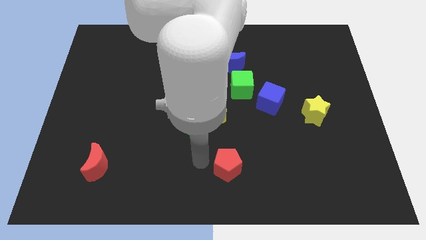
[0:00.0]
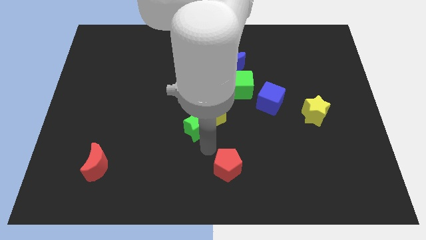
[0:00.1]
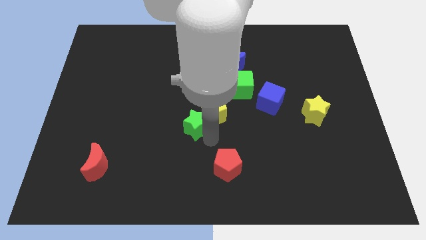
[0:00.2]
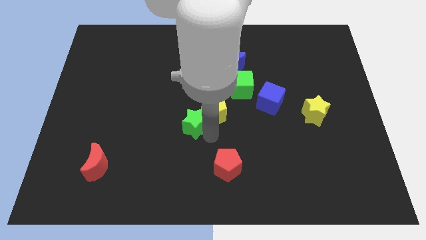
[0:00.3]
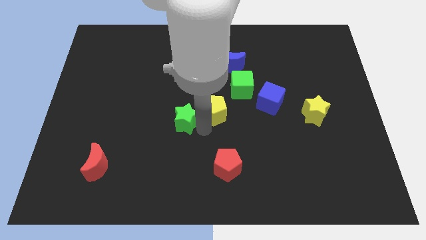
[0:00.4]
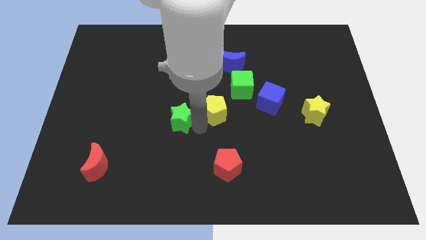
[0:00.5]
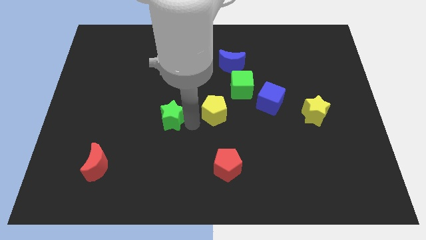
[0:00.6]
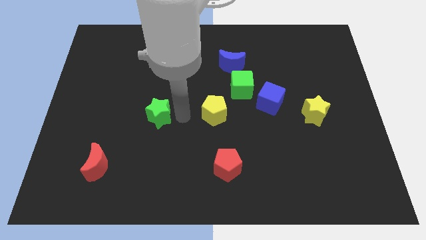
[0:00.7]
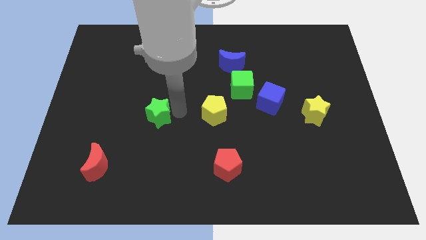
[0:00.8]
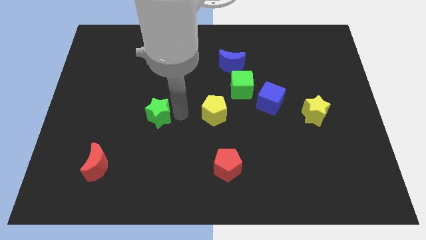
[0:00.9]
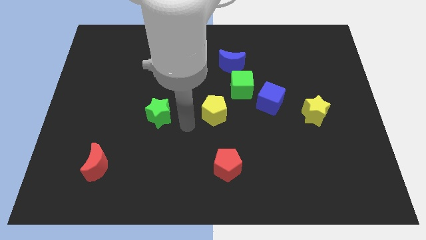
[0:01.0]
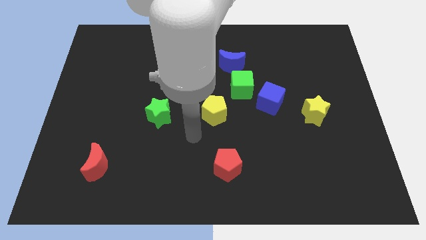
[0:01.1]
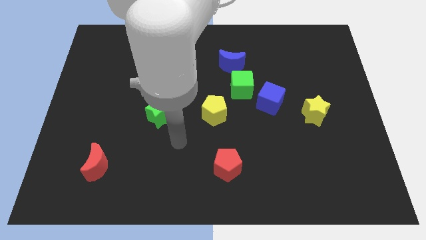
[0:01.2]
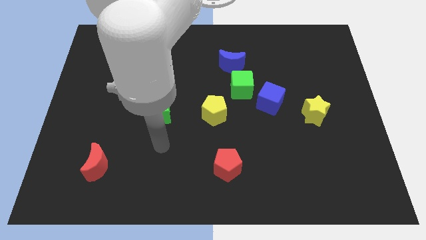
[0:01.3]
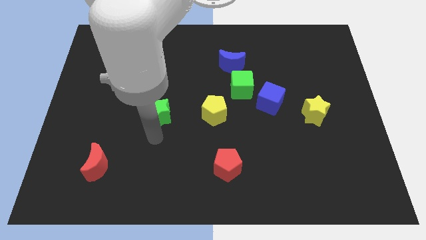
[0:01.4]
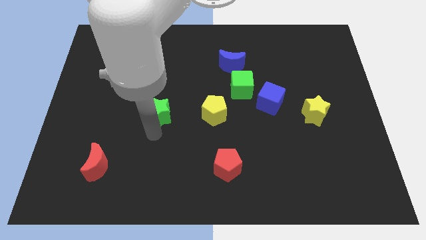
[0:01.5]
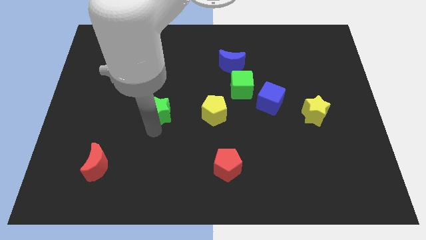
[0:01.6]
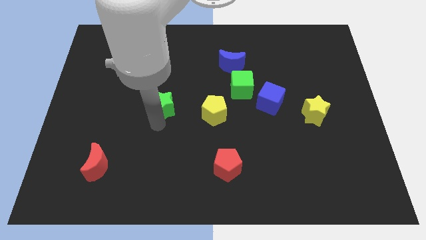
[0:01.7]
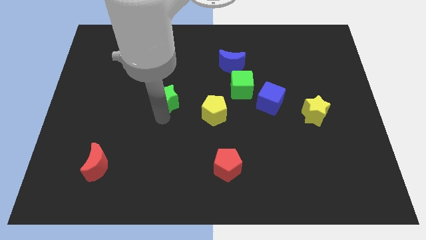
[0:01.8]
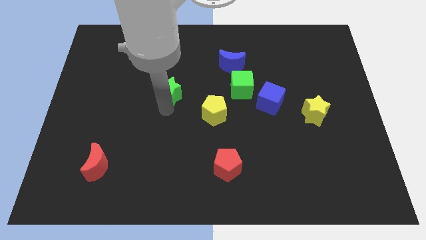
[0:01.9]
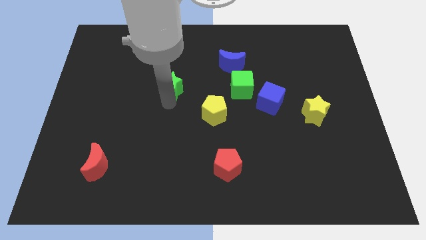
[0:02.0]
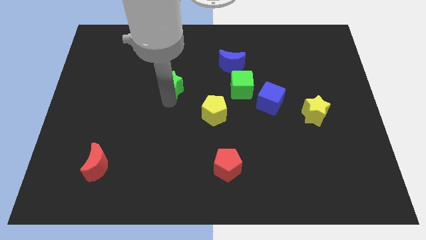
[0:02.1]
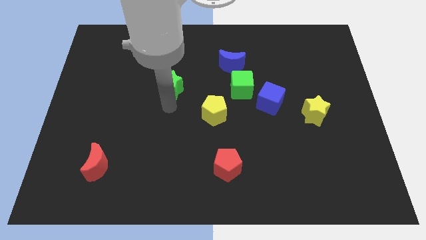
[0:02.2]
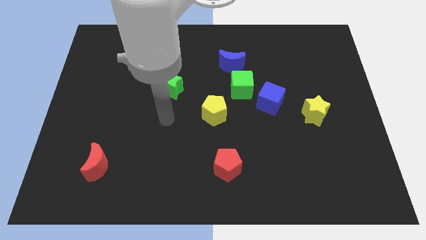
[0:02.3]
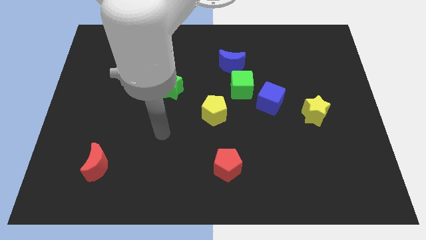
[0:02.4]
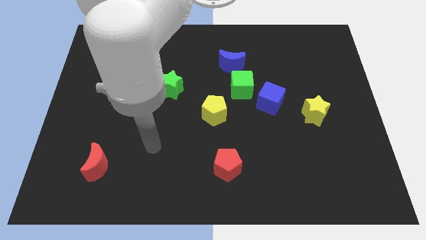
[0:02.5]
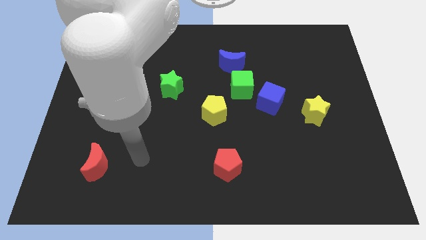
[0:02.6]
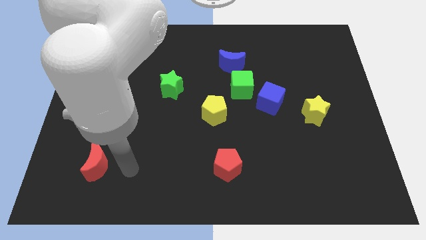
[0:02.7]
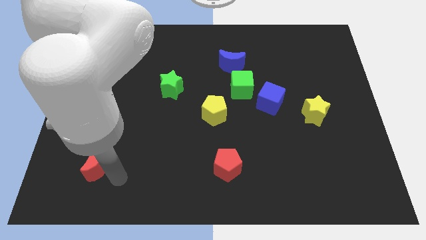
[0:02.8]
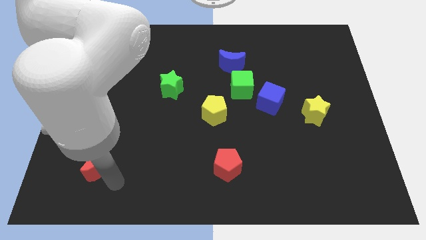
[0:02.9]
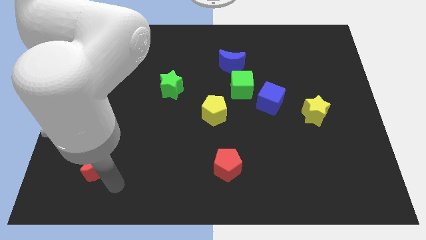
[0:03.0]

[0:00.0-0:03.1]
separate green star and yellow pentagon

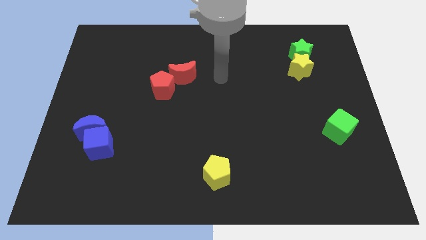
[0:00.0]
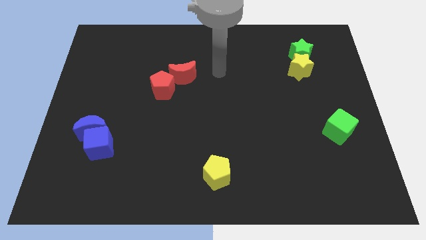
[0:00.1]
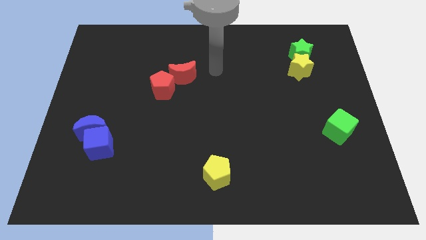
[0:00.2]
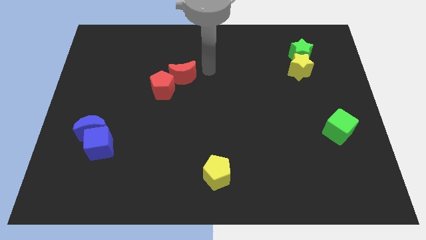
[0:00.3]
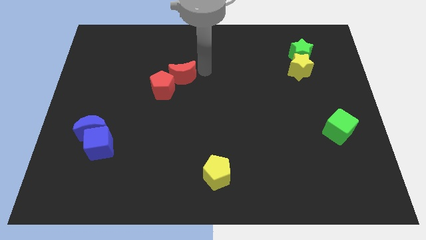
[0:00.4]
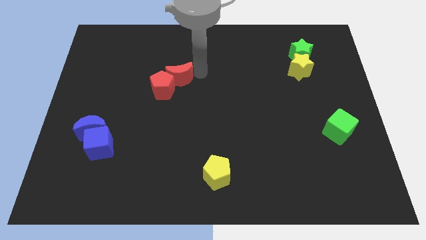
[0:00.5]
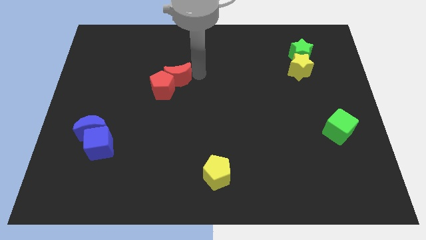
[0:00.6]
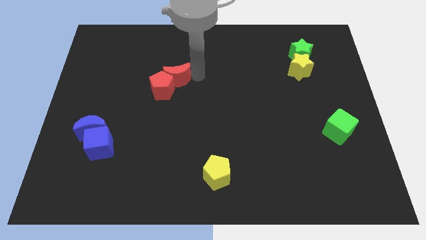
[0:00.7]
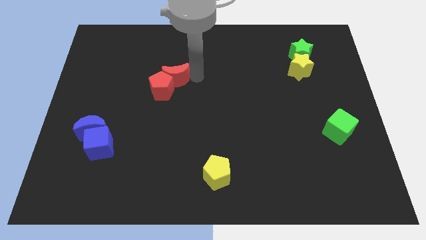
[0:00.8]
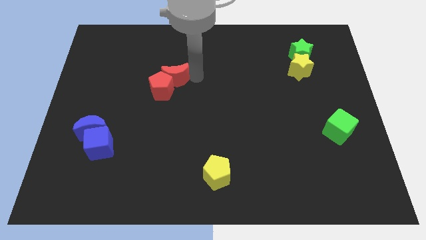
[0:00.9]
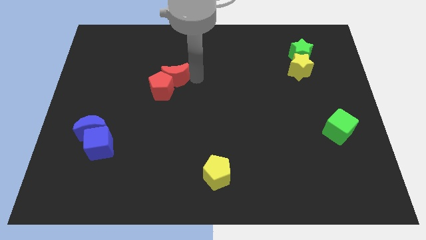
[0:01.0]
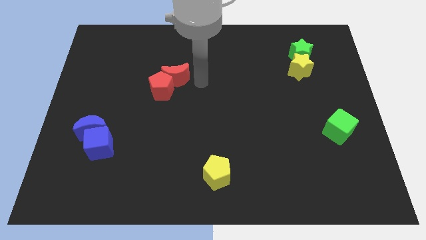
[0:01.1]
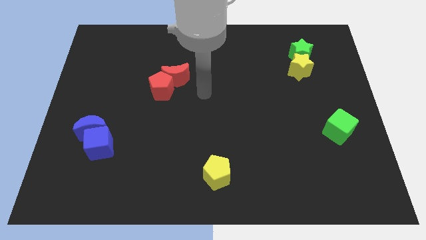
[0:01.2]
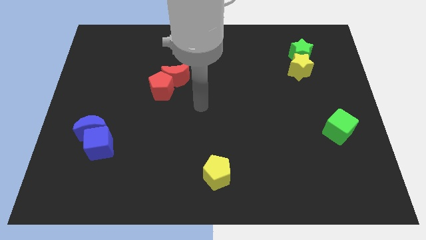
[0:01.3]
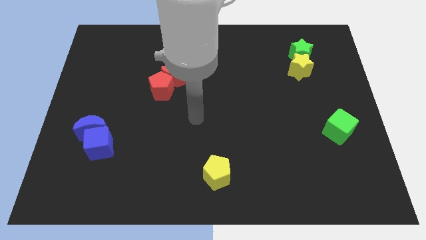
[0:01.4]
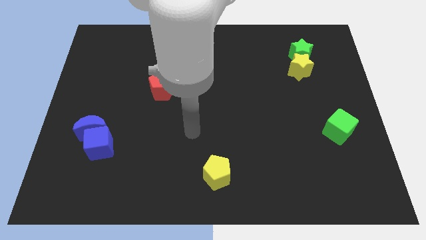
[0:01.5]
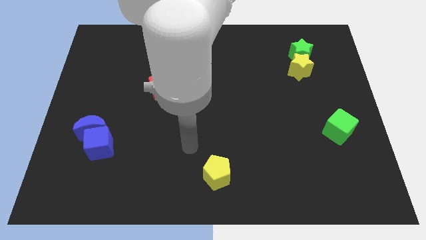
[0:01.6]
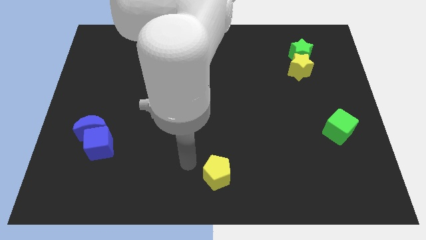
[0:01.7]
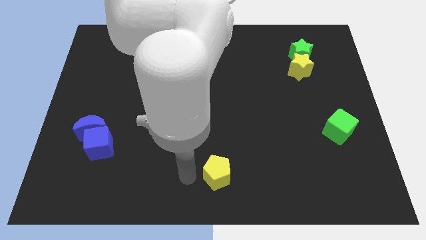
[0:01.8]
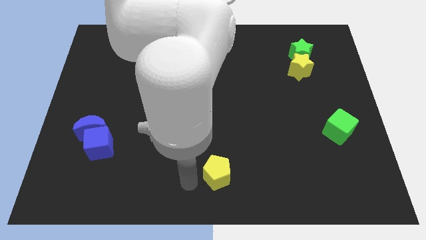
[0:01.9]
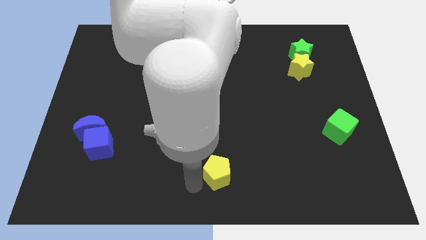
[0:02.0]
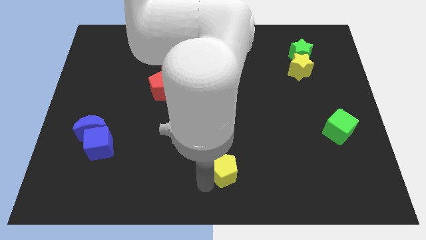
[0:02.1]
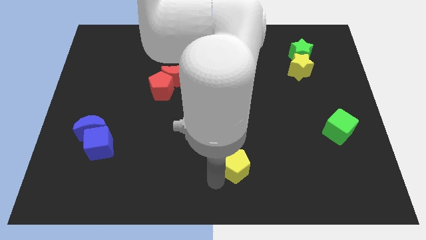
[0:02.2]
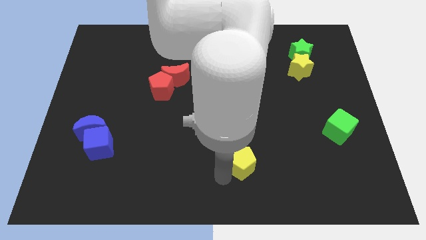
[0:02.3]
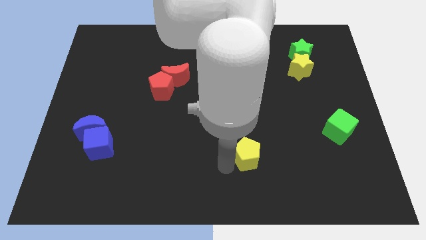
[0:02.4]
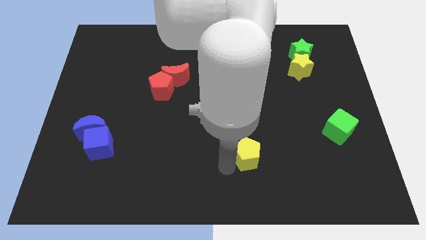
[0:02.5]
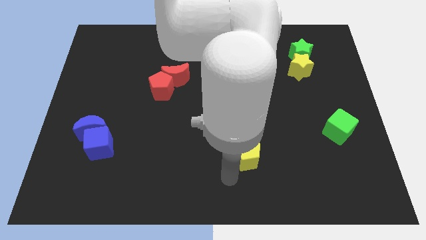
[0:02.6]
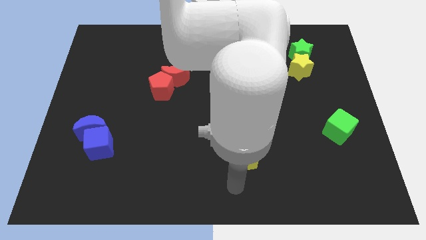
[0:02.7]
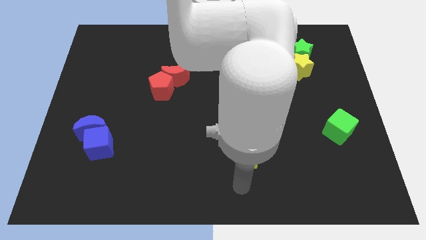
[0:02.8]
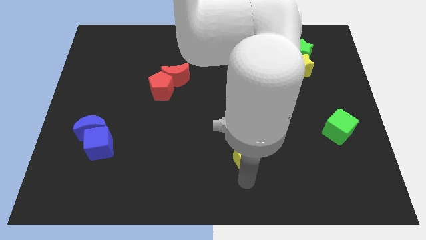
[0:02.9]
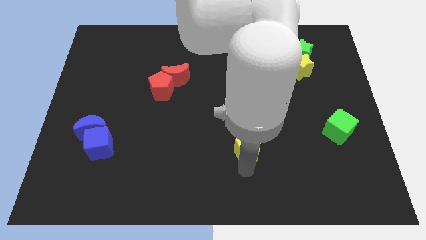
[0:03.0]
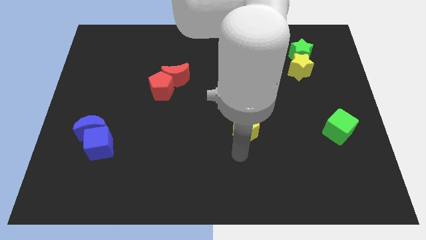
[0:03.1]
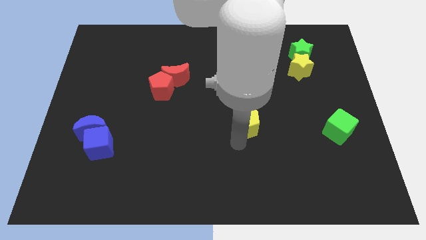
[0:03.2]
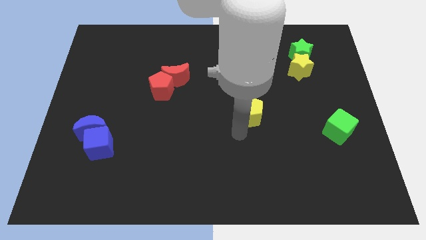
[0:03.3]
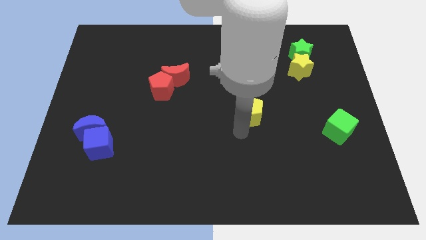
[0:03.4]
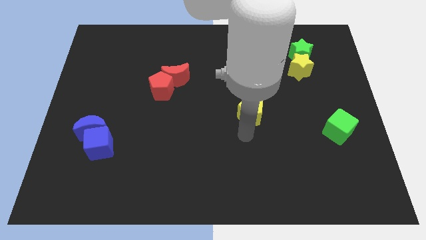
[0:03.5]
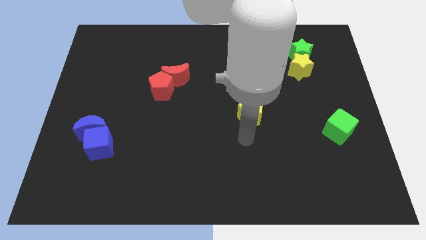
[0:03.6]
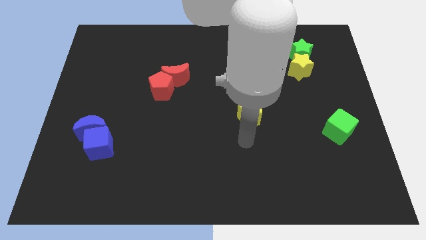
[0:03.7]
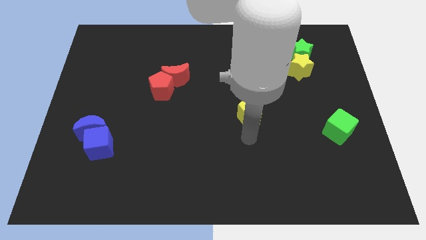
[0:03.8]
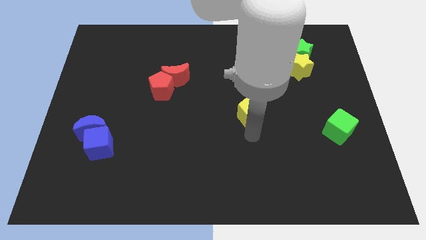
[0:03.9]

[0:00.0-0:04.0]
push yellow pentagon towards the top

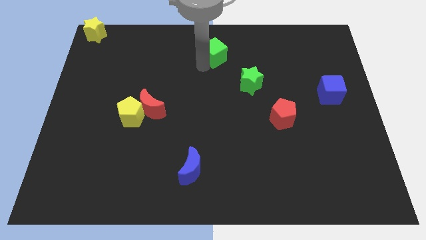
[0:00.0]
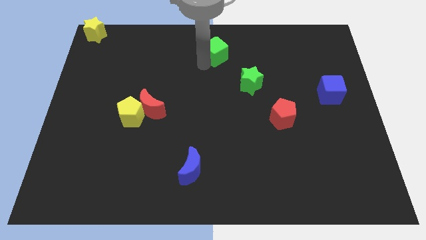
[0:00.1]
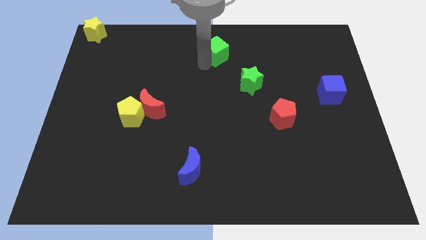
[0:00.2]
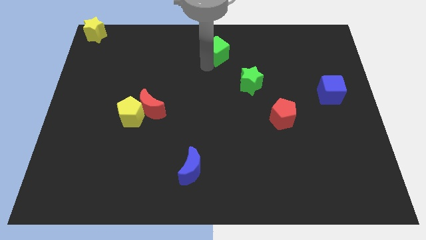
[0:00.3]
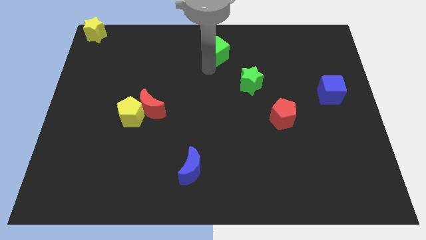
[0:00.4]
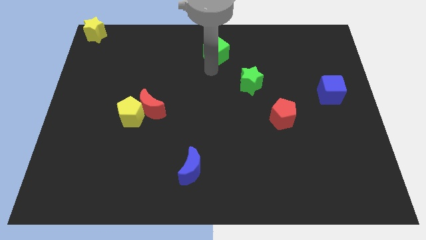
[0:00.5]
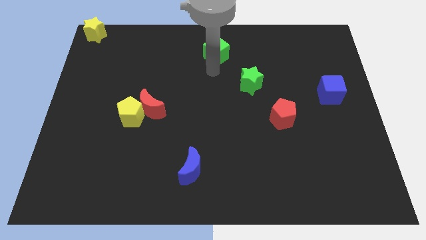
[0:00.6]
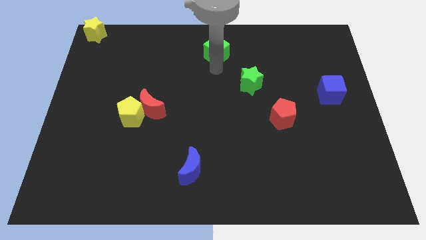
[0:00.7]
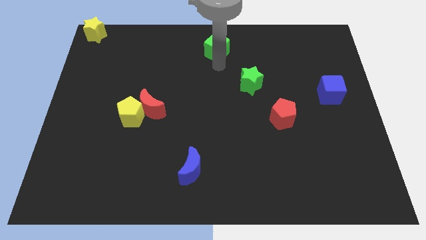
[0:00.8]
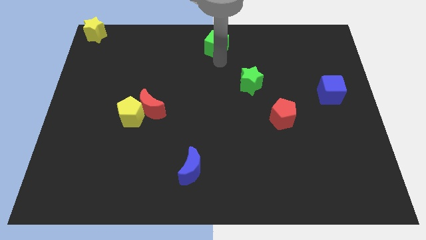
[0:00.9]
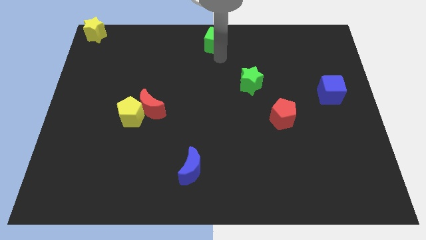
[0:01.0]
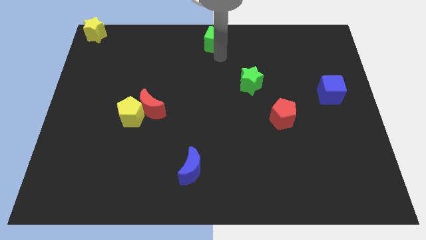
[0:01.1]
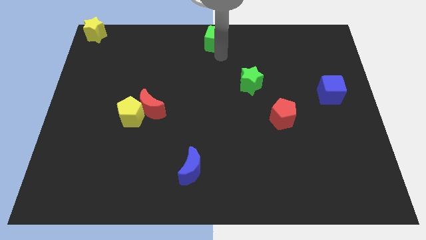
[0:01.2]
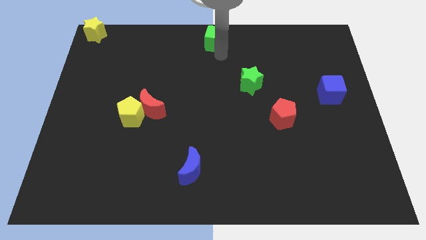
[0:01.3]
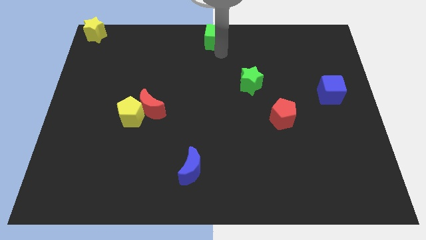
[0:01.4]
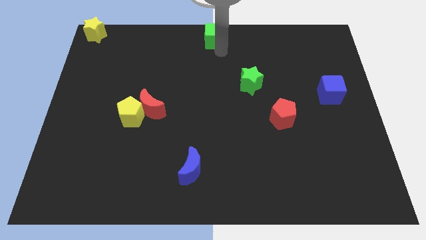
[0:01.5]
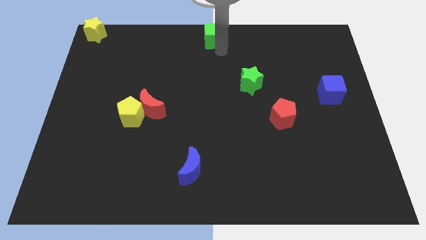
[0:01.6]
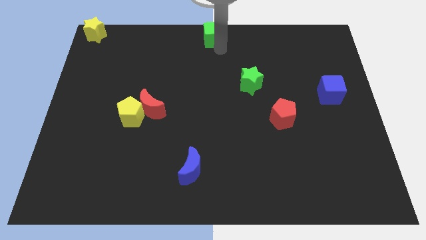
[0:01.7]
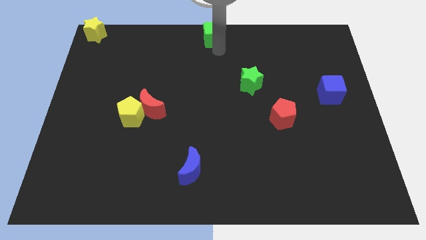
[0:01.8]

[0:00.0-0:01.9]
drag the green cube to the top center of the board
